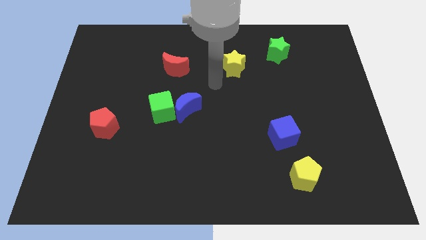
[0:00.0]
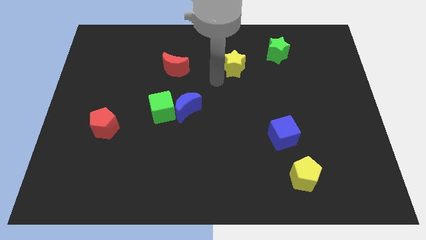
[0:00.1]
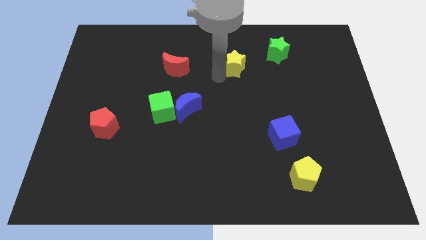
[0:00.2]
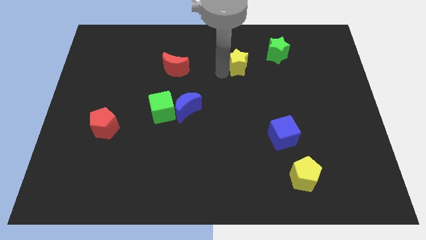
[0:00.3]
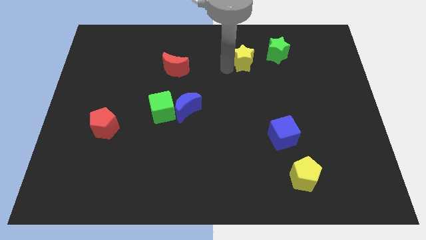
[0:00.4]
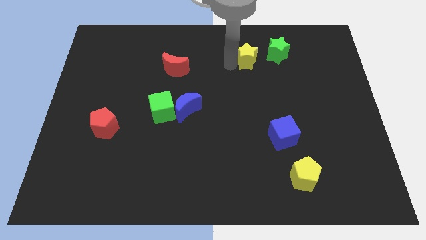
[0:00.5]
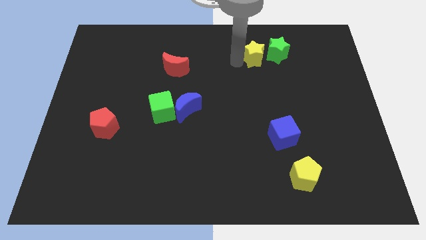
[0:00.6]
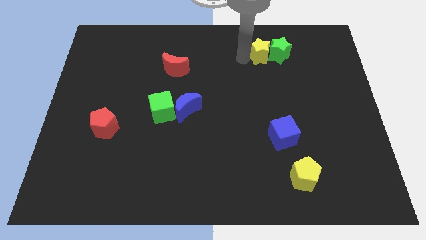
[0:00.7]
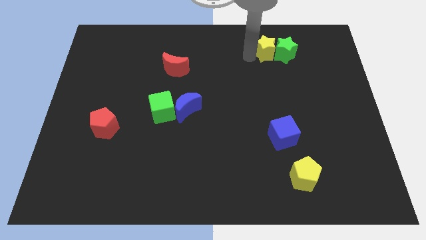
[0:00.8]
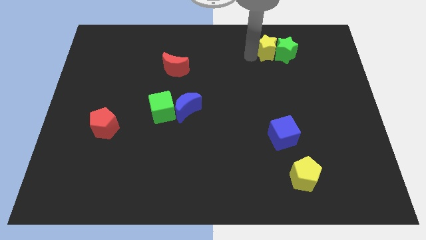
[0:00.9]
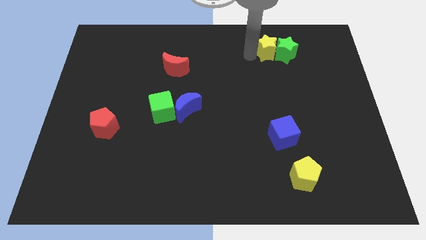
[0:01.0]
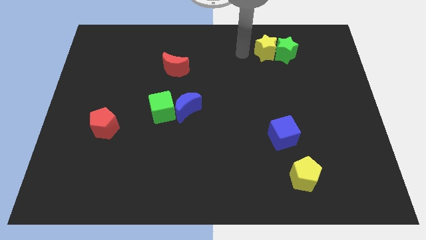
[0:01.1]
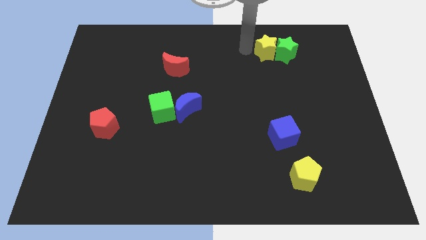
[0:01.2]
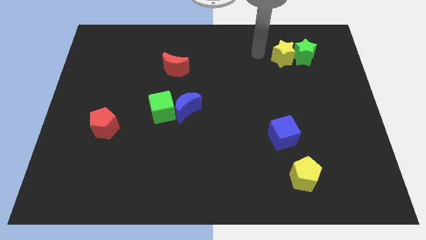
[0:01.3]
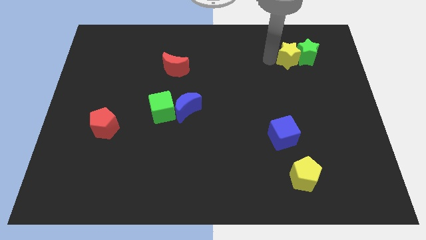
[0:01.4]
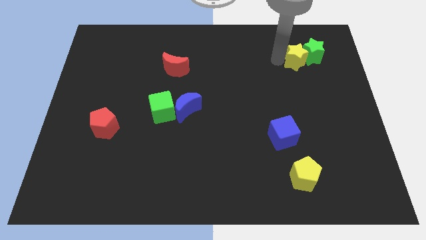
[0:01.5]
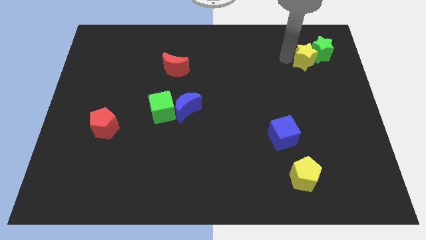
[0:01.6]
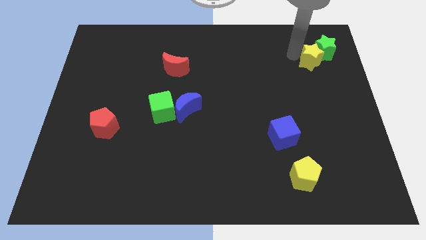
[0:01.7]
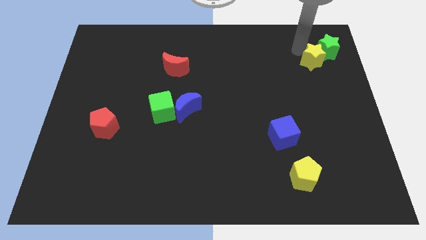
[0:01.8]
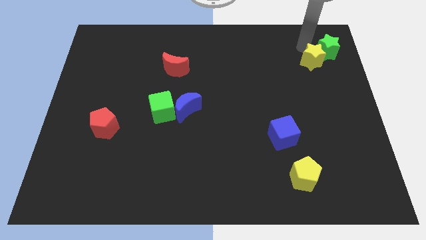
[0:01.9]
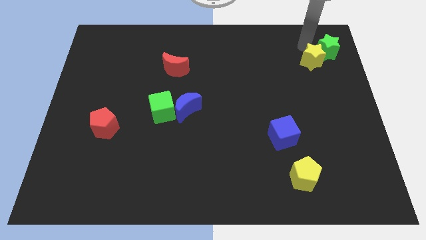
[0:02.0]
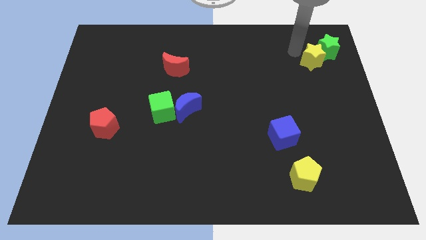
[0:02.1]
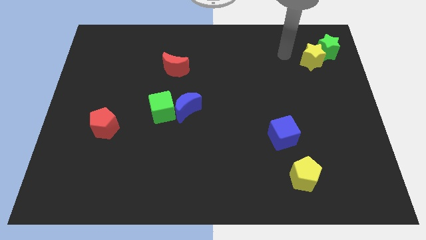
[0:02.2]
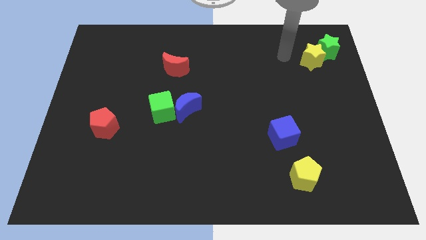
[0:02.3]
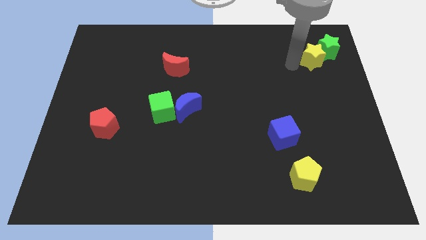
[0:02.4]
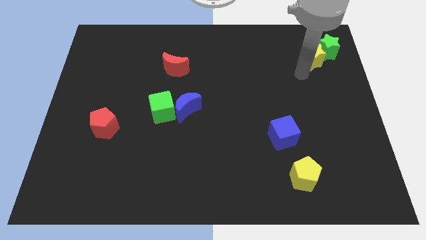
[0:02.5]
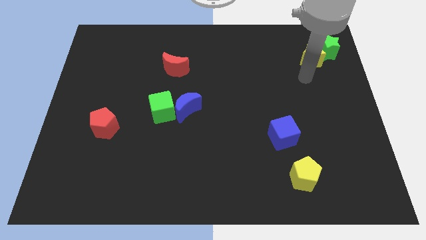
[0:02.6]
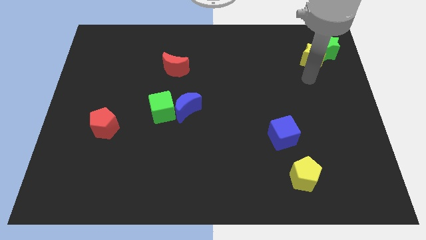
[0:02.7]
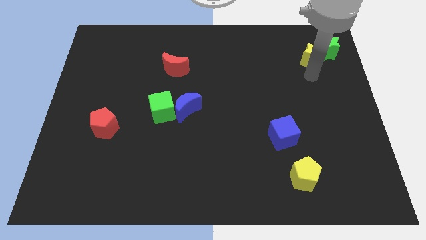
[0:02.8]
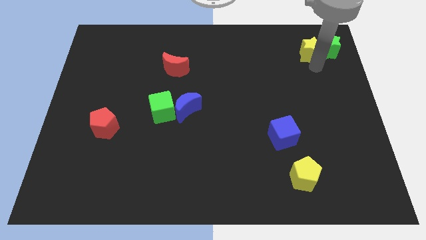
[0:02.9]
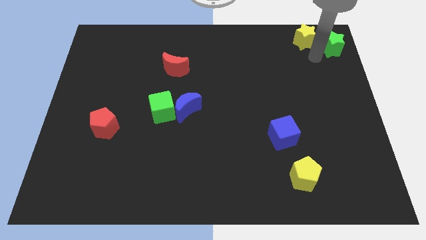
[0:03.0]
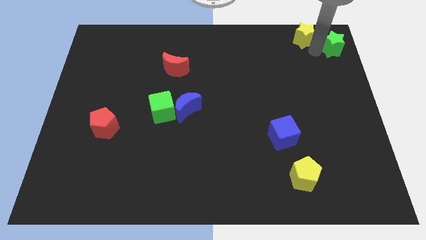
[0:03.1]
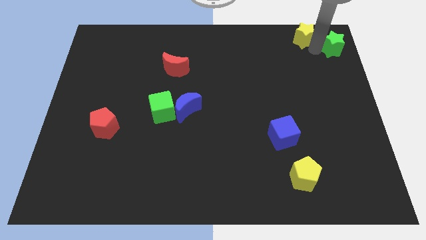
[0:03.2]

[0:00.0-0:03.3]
push the yellow star and green star to the right side of the board

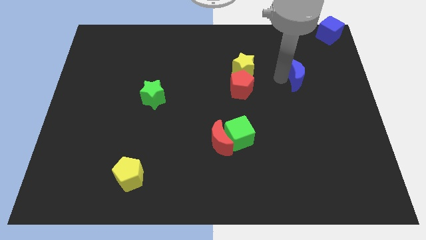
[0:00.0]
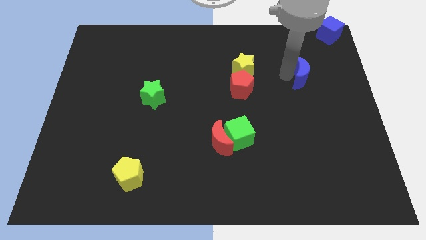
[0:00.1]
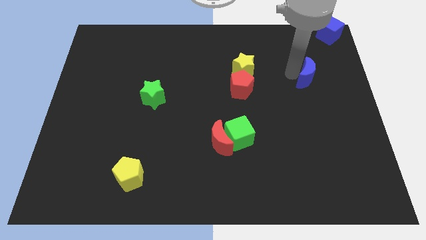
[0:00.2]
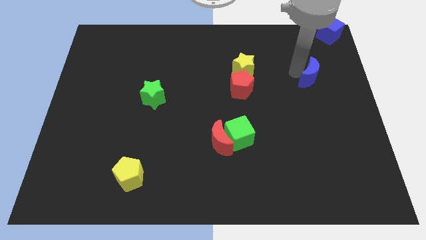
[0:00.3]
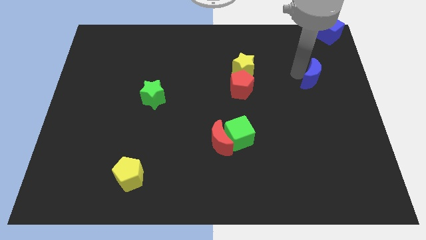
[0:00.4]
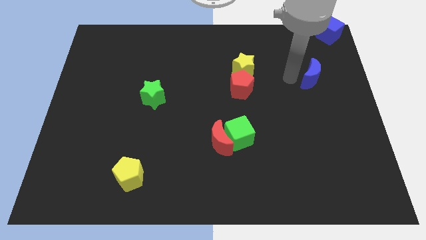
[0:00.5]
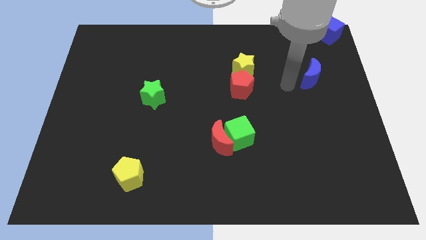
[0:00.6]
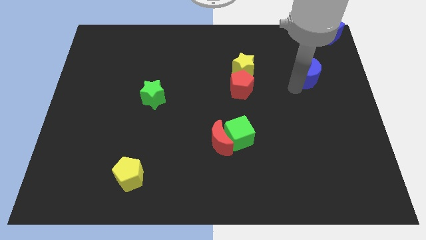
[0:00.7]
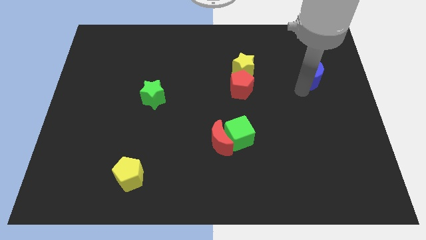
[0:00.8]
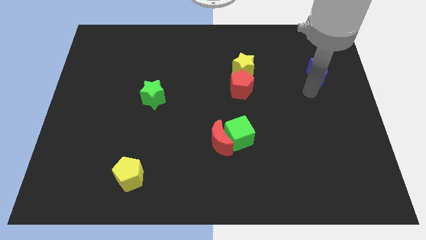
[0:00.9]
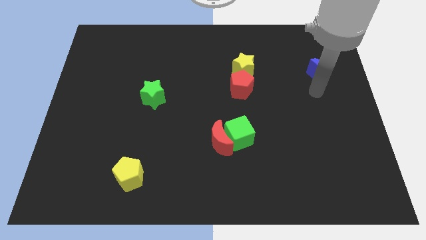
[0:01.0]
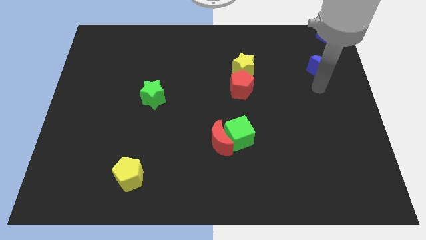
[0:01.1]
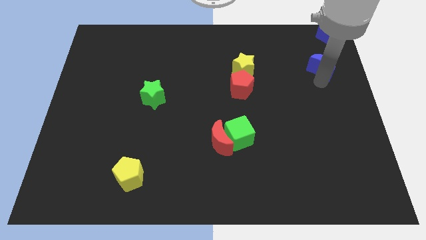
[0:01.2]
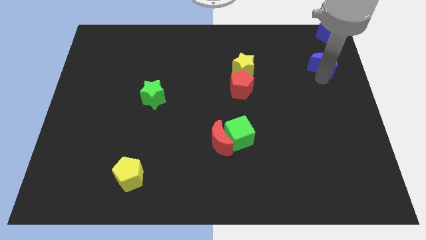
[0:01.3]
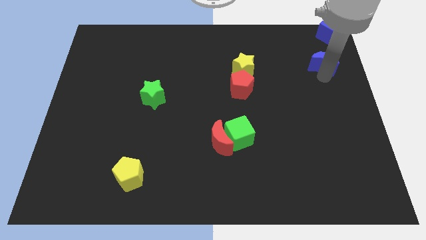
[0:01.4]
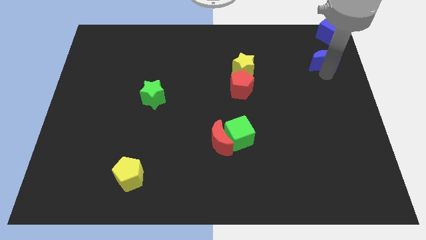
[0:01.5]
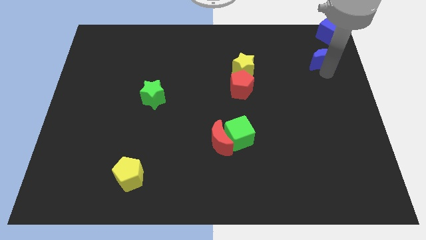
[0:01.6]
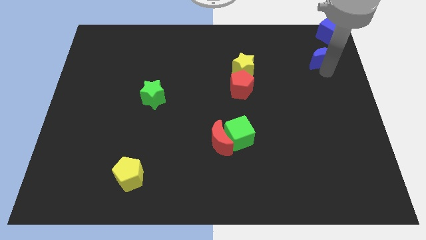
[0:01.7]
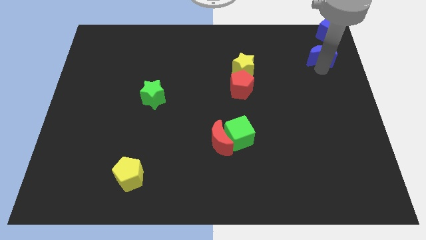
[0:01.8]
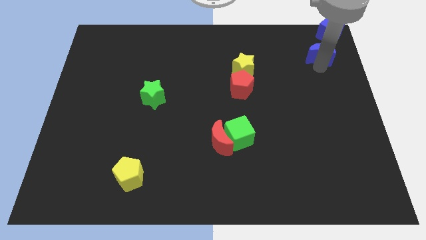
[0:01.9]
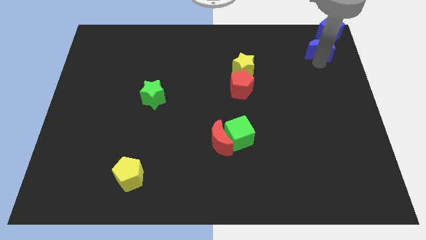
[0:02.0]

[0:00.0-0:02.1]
slide the blue moon towards the top right

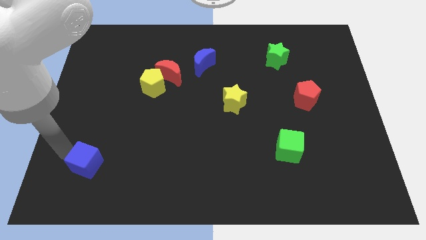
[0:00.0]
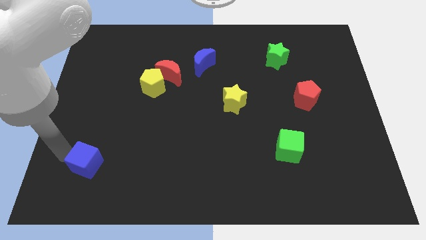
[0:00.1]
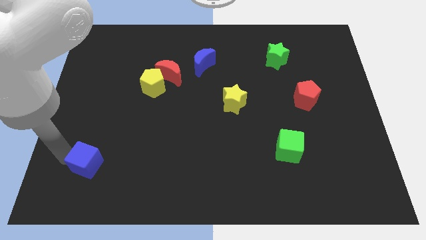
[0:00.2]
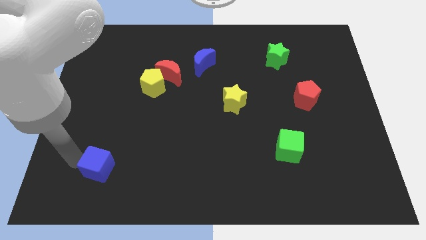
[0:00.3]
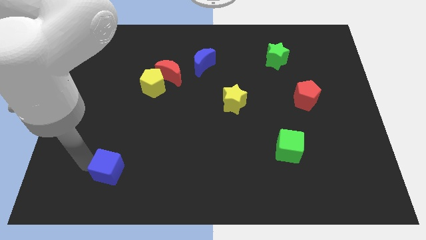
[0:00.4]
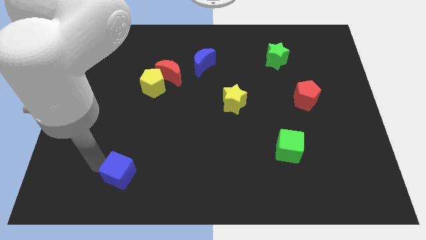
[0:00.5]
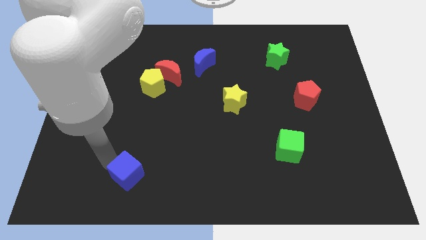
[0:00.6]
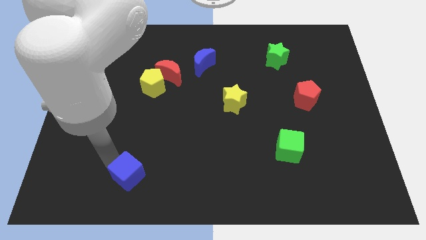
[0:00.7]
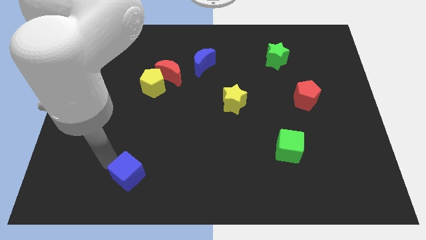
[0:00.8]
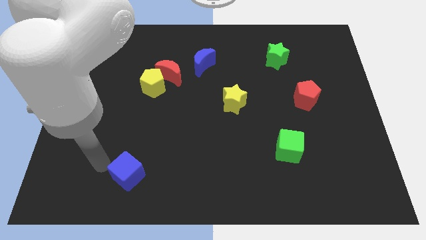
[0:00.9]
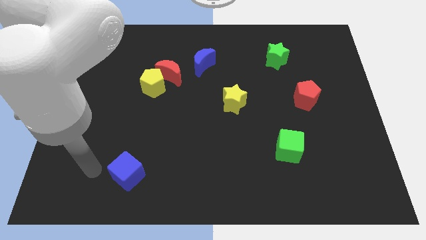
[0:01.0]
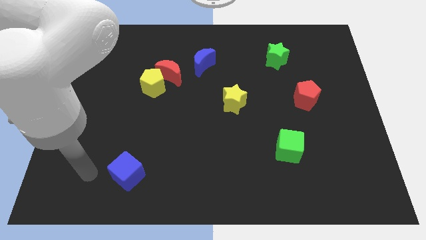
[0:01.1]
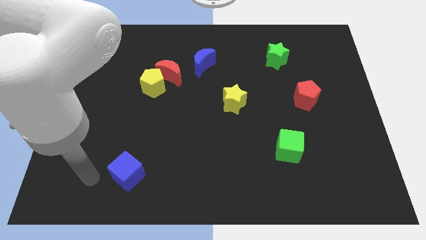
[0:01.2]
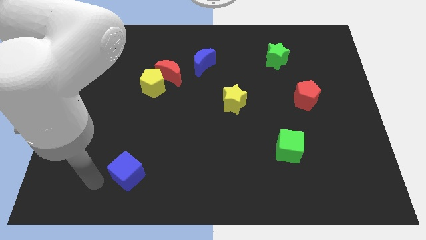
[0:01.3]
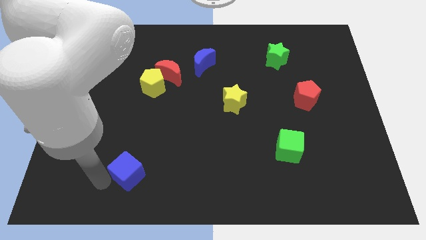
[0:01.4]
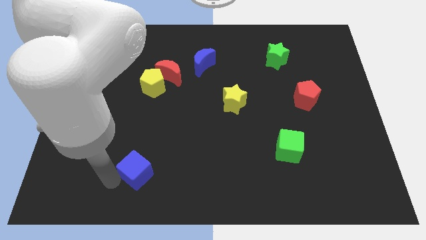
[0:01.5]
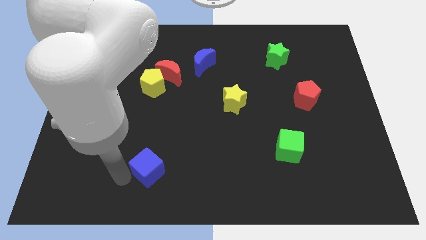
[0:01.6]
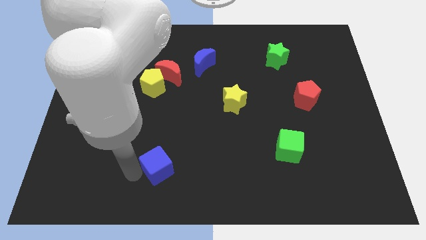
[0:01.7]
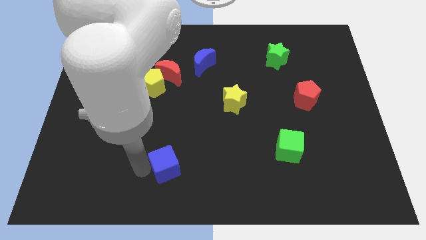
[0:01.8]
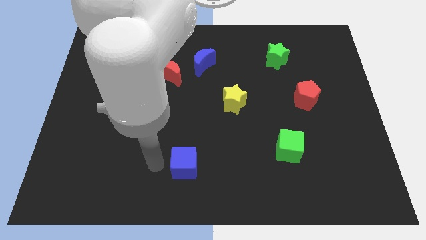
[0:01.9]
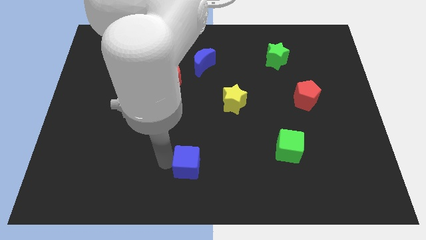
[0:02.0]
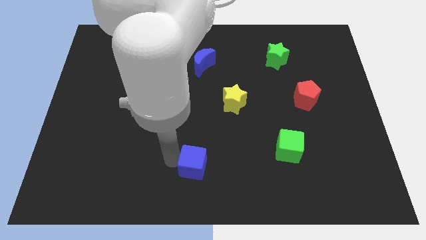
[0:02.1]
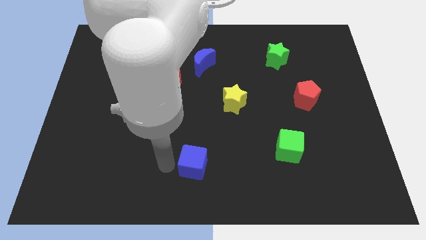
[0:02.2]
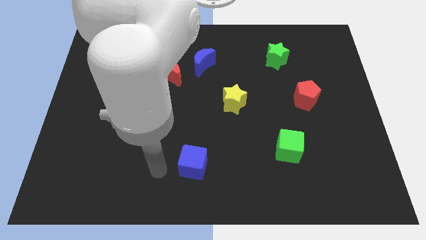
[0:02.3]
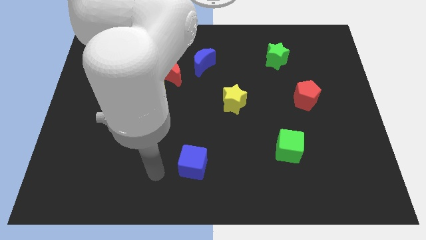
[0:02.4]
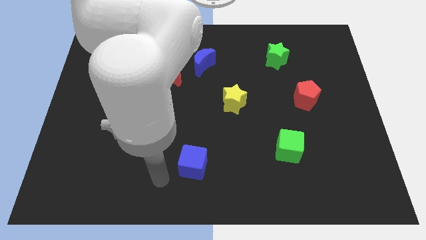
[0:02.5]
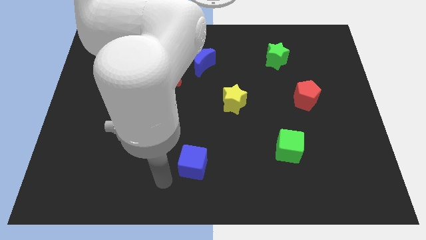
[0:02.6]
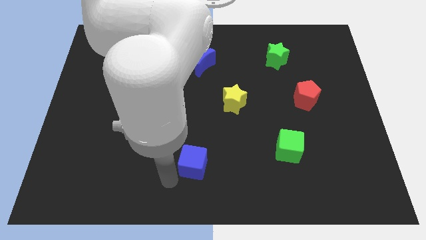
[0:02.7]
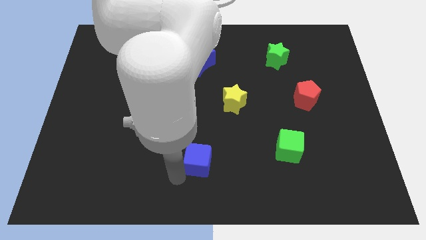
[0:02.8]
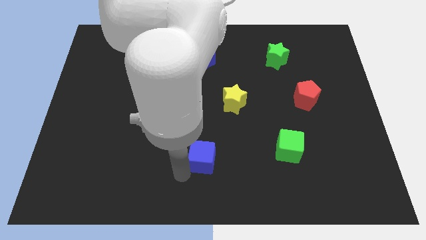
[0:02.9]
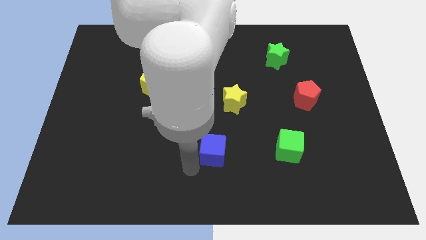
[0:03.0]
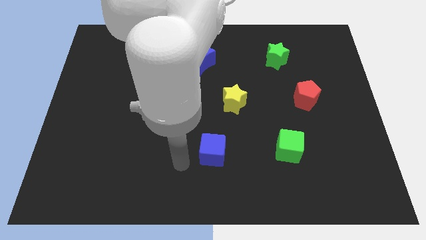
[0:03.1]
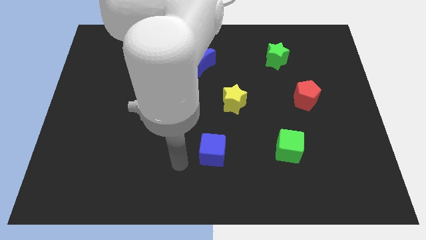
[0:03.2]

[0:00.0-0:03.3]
place the blue cube below the yellow star

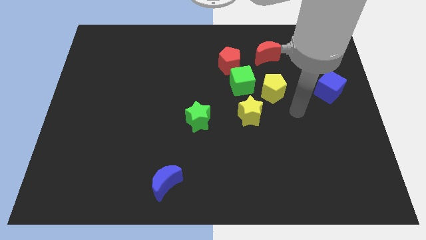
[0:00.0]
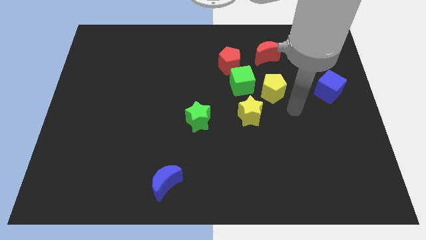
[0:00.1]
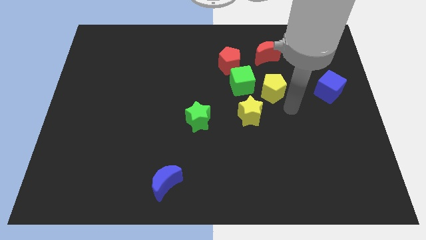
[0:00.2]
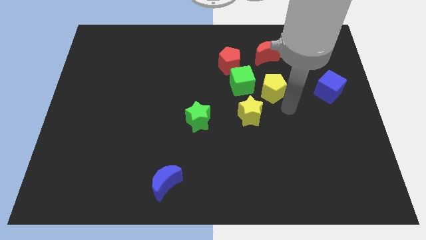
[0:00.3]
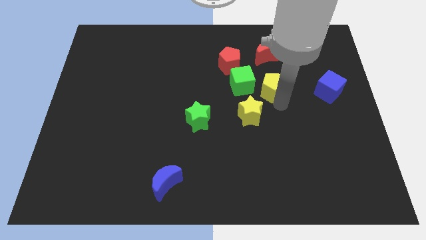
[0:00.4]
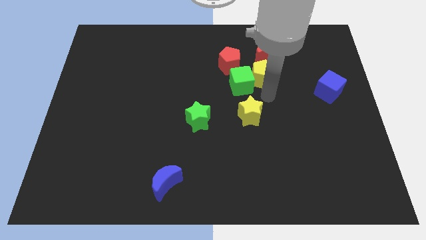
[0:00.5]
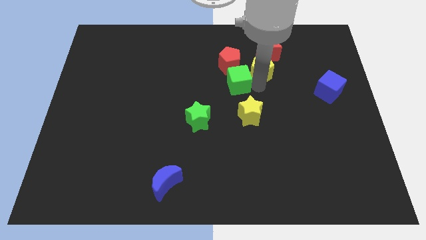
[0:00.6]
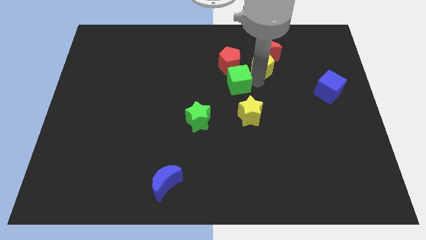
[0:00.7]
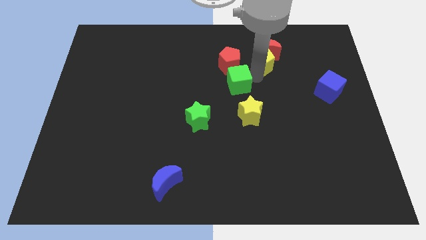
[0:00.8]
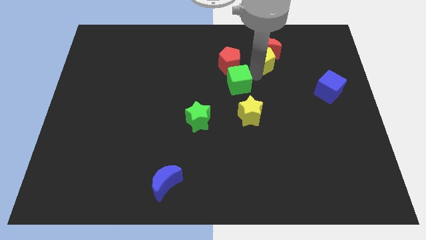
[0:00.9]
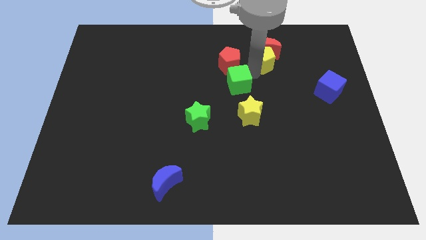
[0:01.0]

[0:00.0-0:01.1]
push yellow pentagon below red crescent
